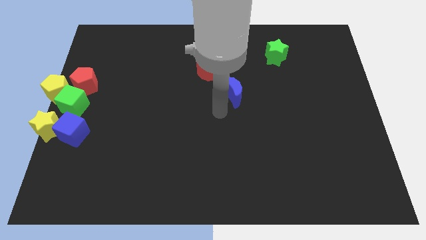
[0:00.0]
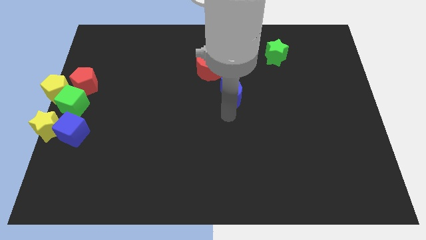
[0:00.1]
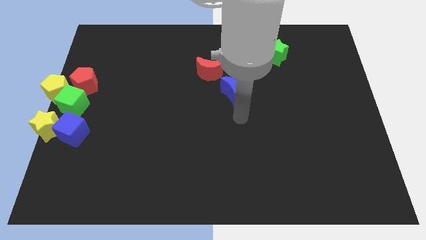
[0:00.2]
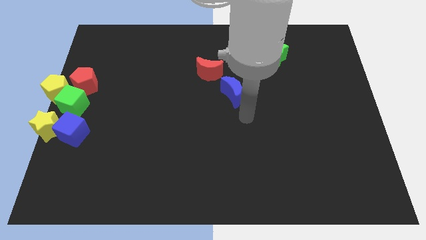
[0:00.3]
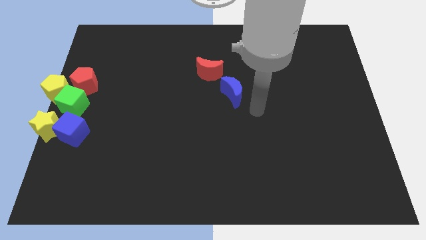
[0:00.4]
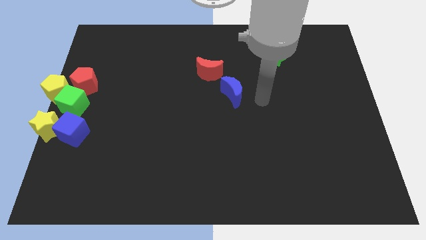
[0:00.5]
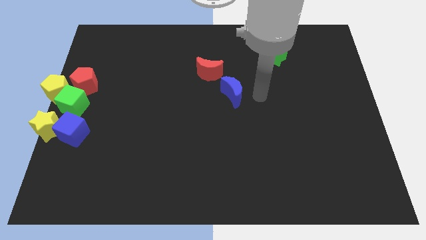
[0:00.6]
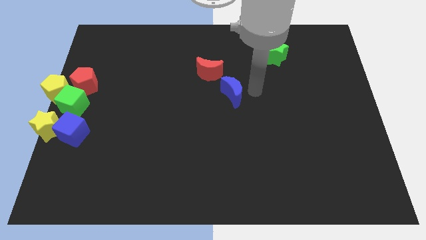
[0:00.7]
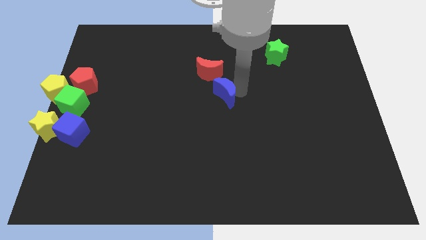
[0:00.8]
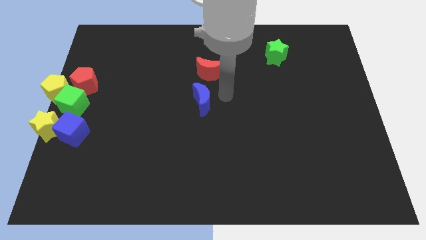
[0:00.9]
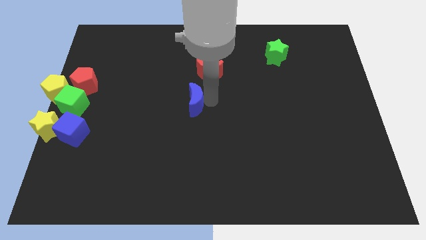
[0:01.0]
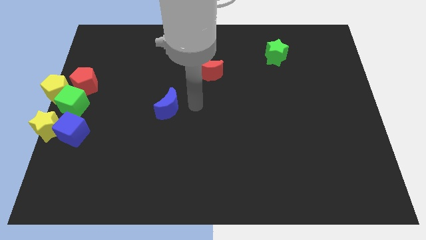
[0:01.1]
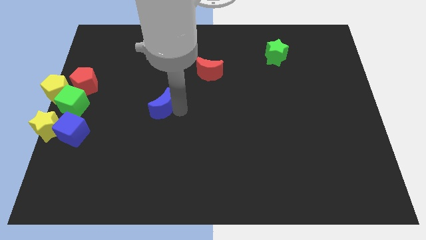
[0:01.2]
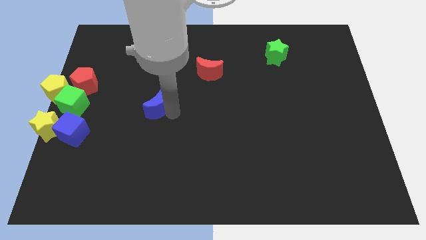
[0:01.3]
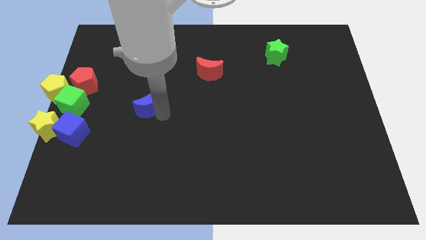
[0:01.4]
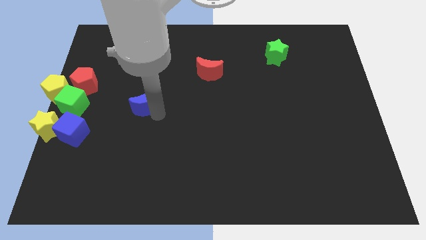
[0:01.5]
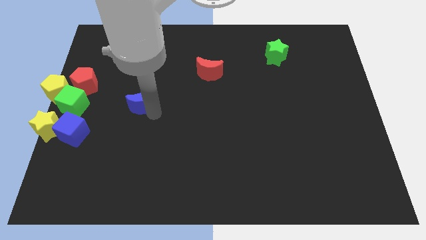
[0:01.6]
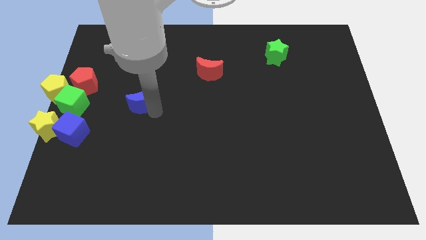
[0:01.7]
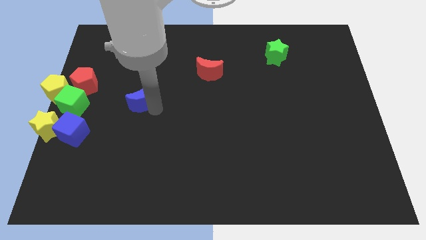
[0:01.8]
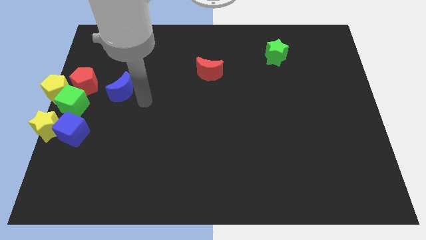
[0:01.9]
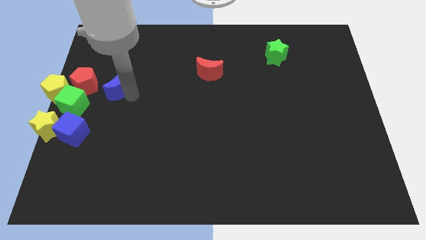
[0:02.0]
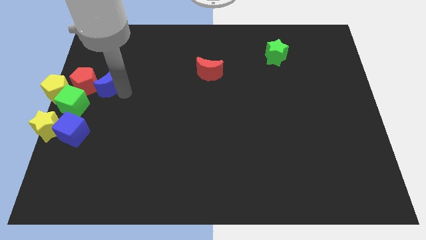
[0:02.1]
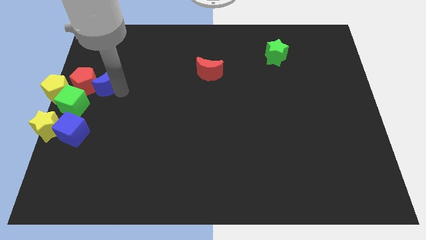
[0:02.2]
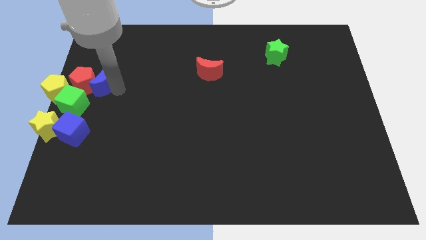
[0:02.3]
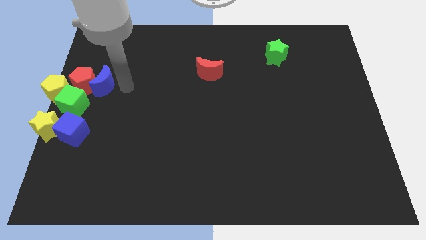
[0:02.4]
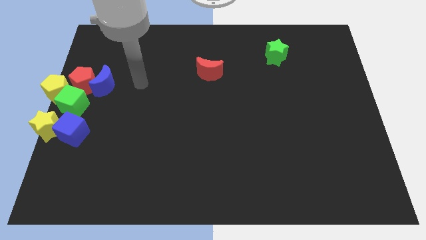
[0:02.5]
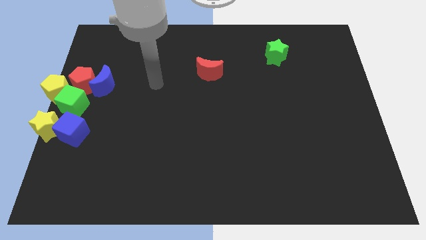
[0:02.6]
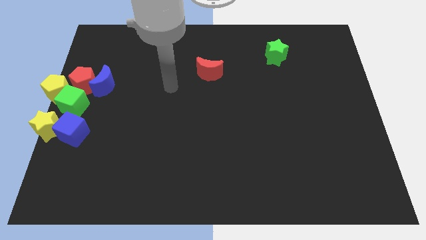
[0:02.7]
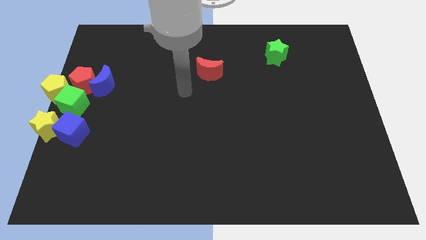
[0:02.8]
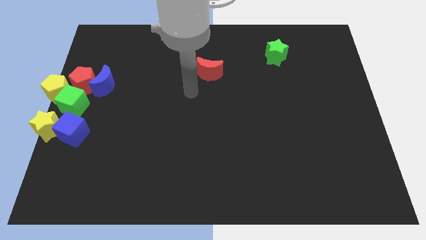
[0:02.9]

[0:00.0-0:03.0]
push the blue moon into the red pentagon

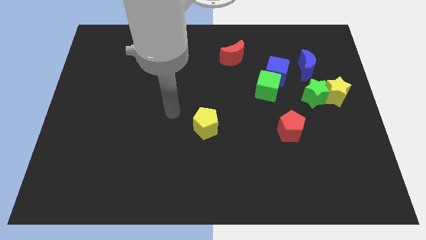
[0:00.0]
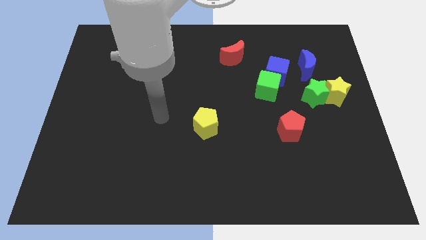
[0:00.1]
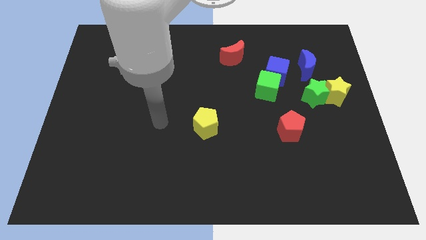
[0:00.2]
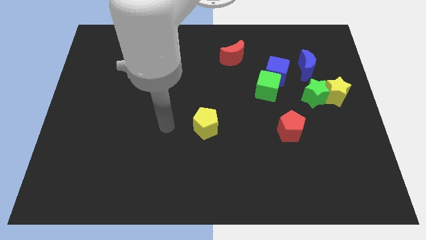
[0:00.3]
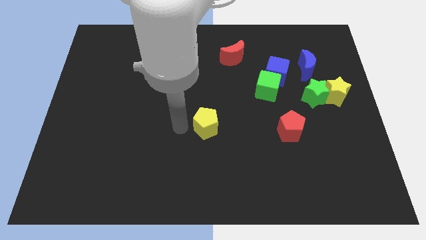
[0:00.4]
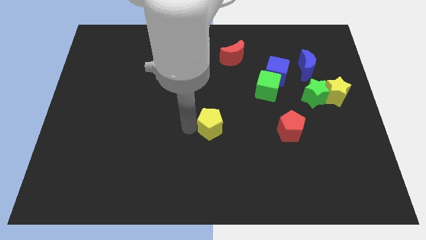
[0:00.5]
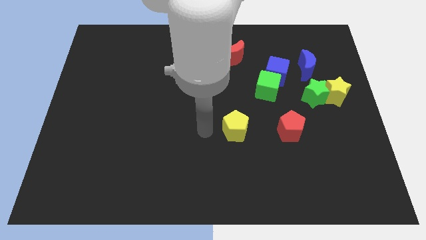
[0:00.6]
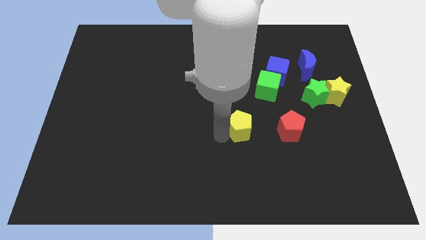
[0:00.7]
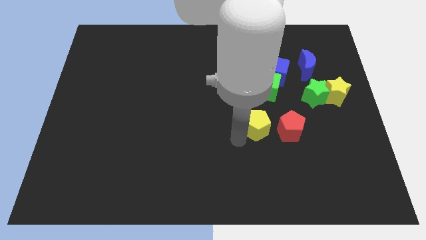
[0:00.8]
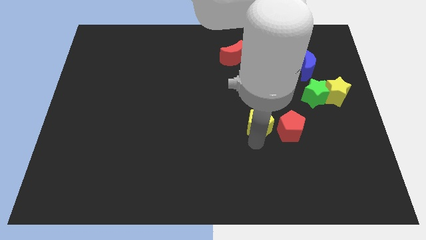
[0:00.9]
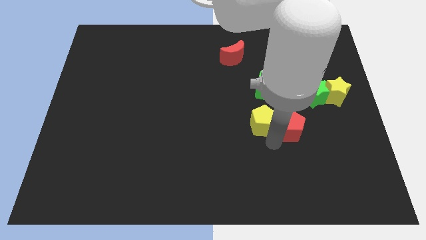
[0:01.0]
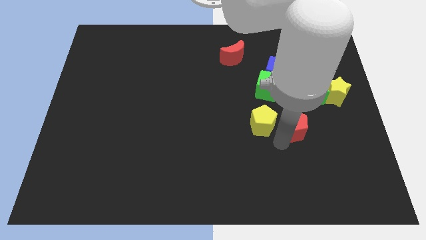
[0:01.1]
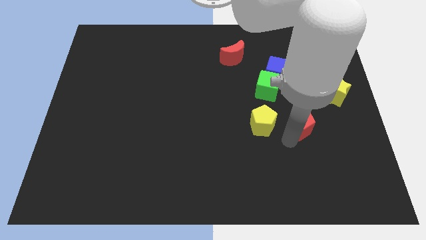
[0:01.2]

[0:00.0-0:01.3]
move the yellow pentagon left beside the red pentagon

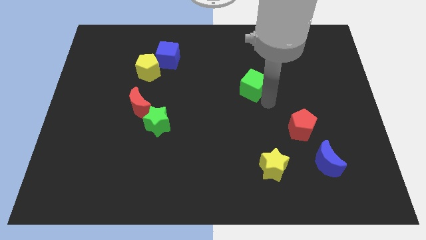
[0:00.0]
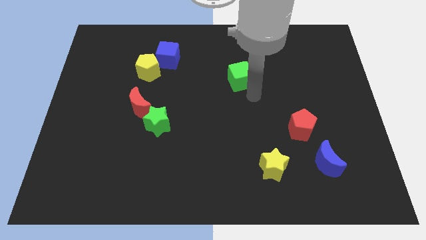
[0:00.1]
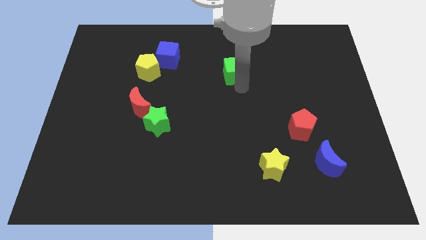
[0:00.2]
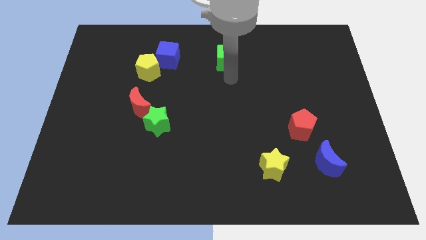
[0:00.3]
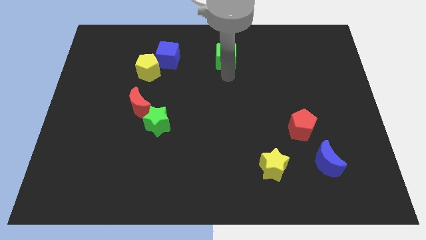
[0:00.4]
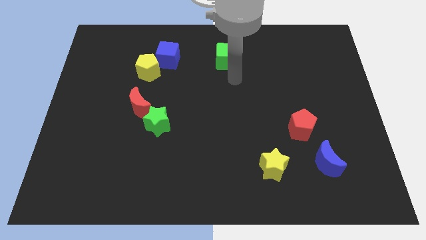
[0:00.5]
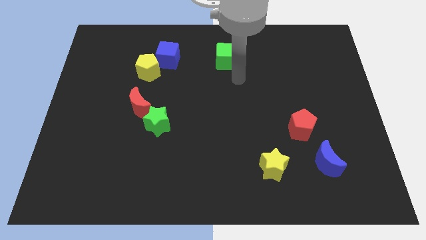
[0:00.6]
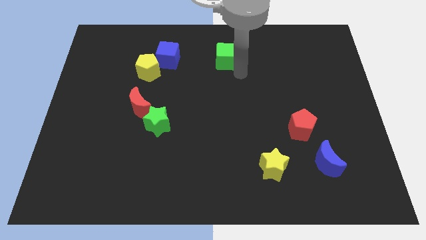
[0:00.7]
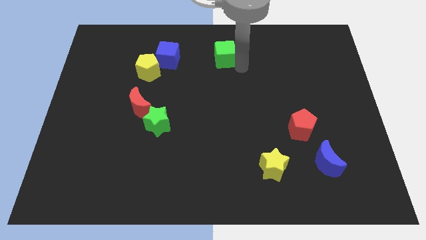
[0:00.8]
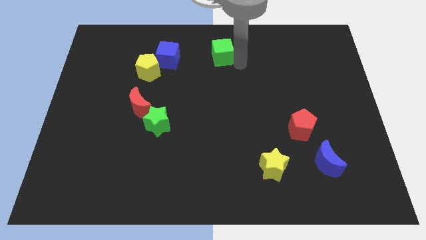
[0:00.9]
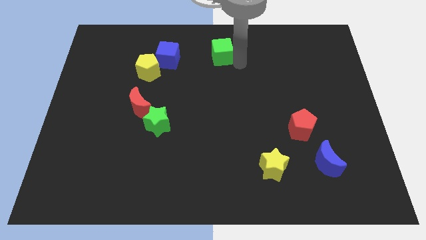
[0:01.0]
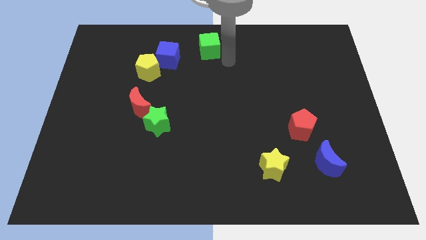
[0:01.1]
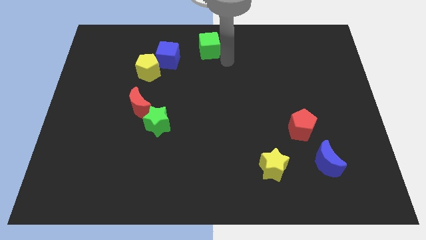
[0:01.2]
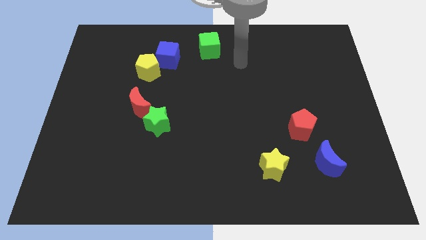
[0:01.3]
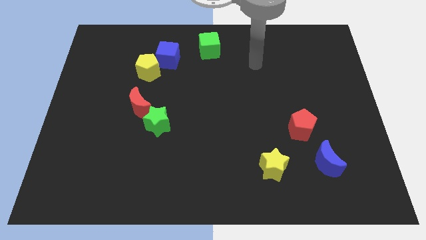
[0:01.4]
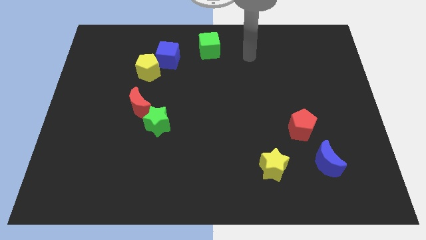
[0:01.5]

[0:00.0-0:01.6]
push the green cube to the top side

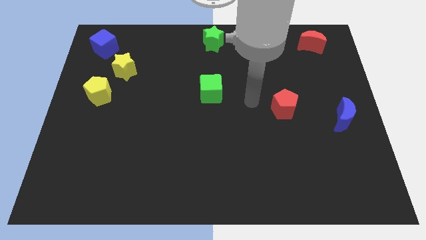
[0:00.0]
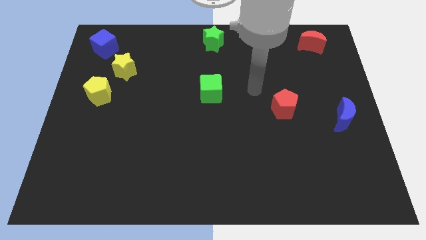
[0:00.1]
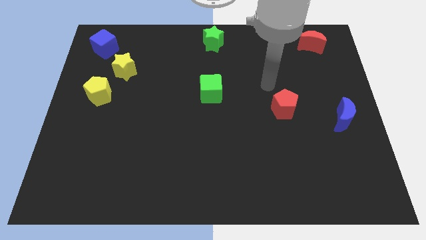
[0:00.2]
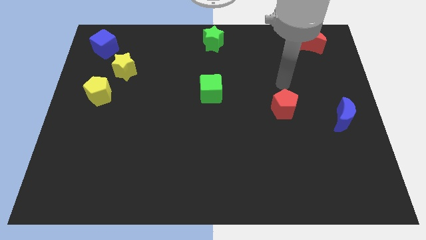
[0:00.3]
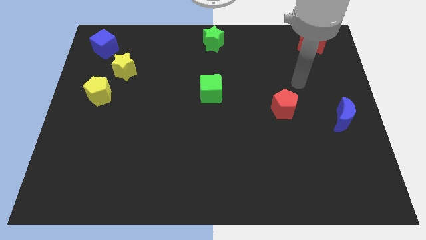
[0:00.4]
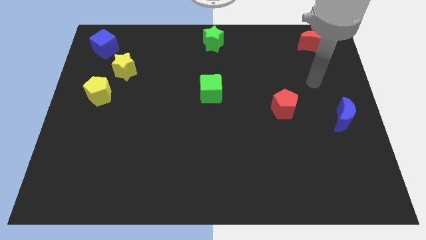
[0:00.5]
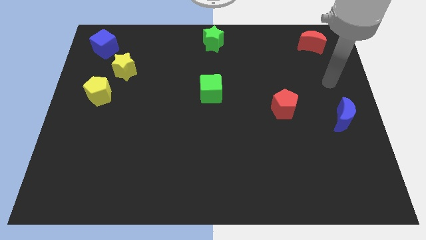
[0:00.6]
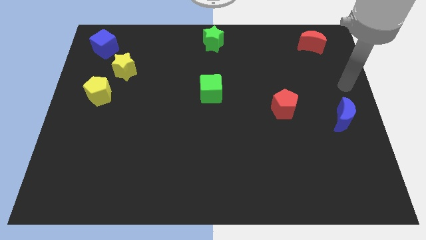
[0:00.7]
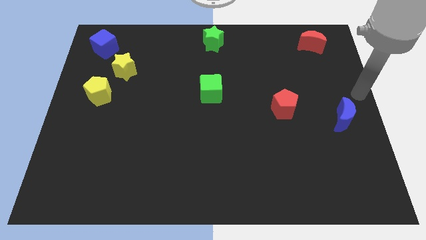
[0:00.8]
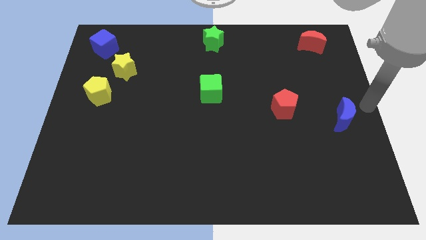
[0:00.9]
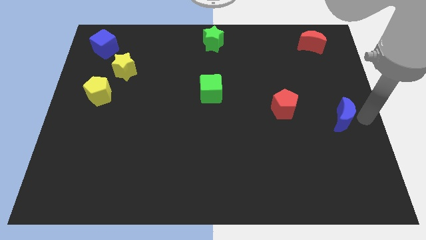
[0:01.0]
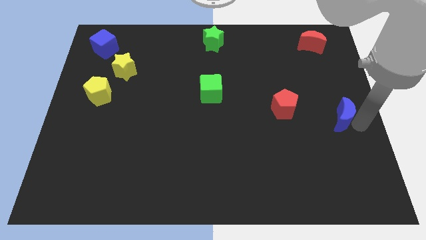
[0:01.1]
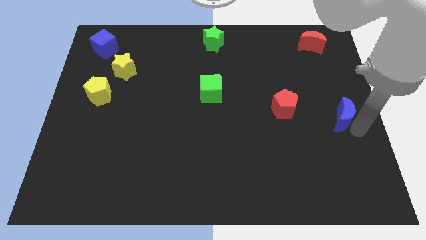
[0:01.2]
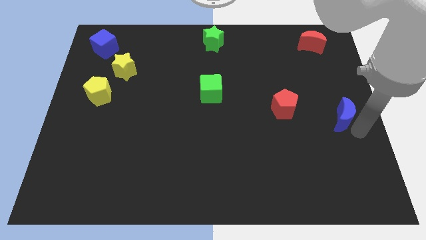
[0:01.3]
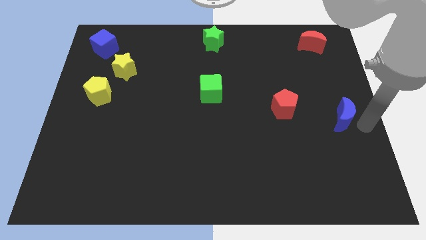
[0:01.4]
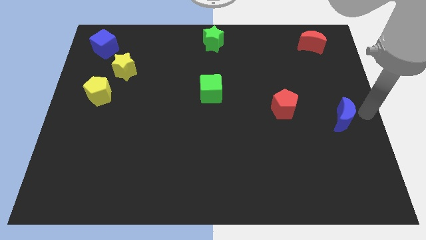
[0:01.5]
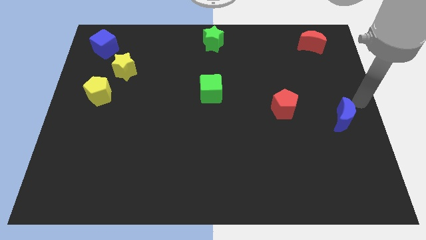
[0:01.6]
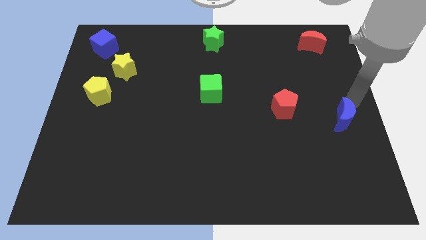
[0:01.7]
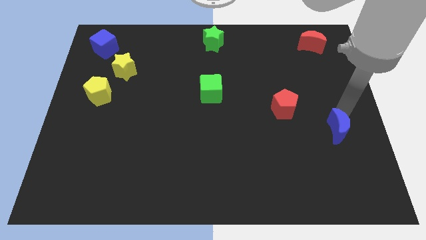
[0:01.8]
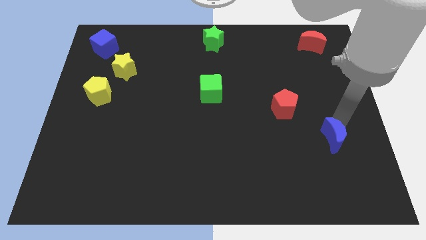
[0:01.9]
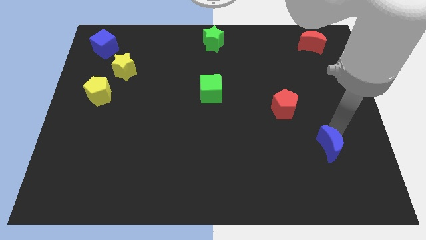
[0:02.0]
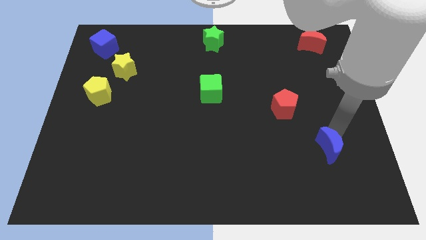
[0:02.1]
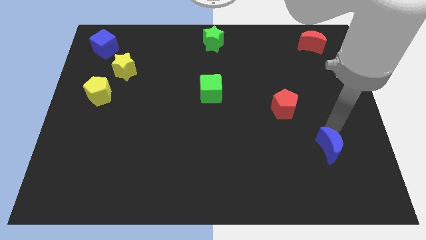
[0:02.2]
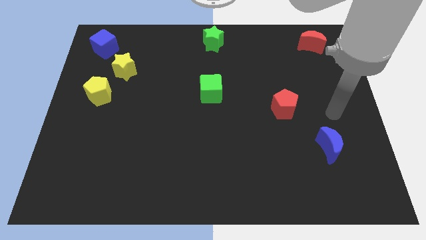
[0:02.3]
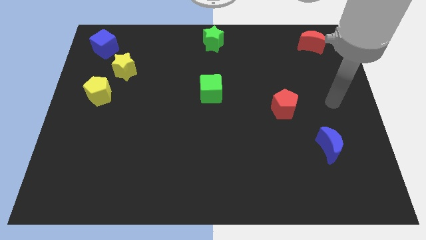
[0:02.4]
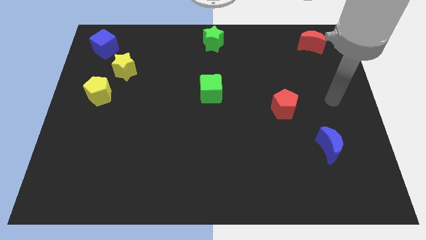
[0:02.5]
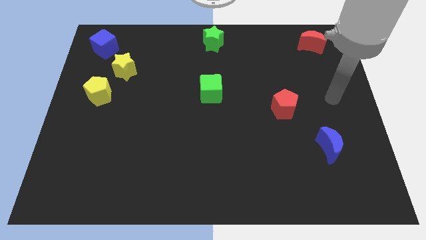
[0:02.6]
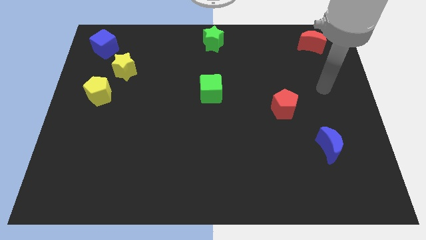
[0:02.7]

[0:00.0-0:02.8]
push blue moon downwards a bit

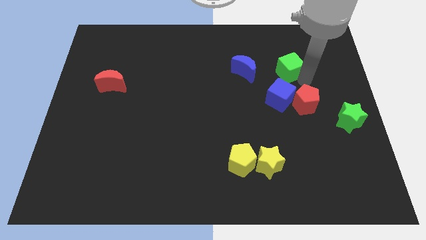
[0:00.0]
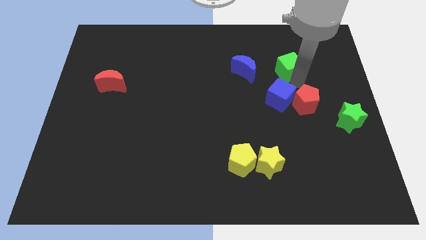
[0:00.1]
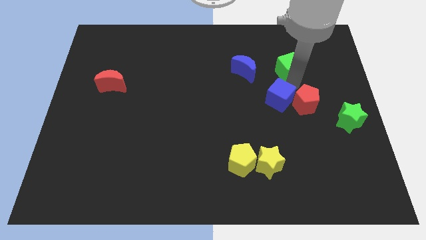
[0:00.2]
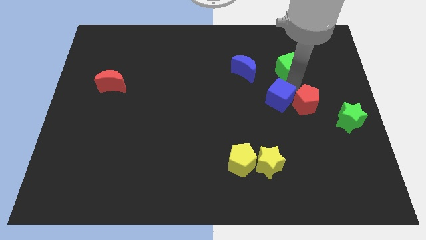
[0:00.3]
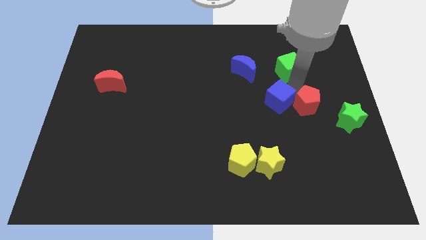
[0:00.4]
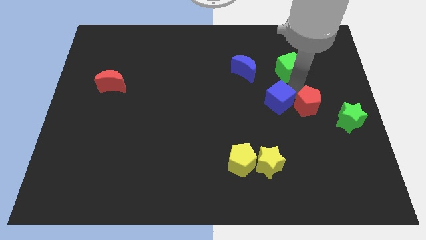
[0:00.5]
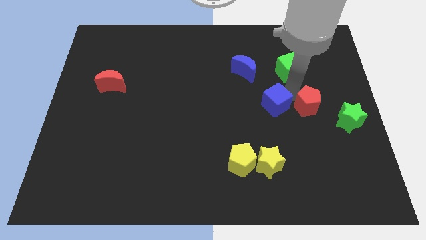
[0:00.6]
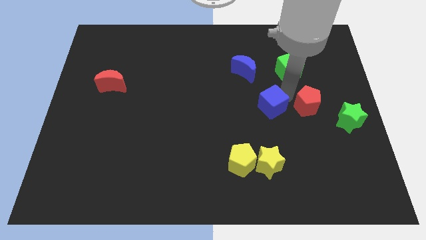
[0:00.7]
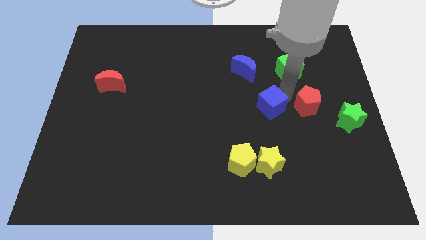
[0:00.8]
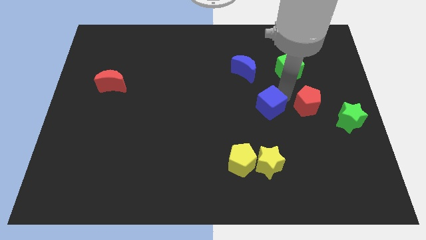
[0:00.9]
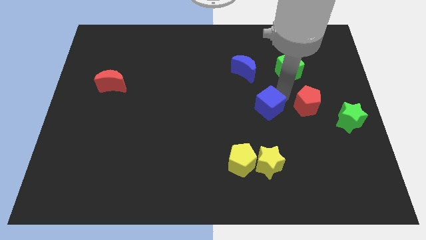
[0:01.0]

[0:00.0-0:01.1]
separate blue cube from red pentagon
